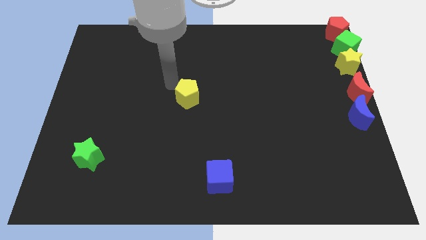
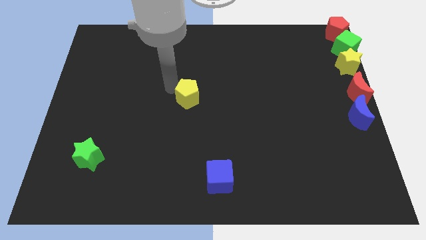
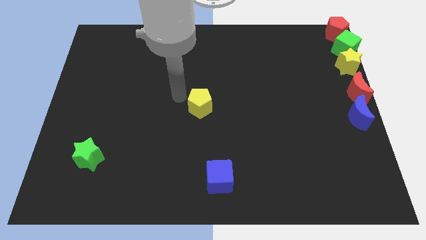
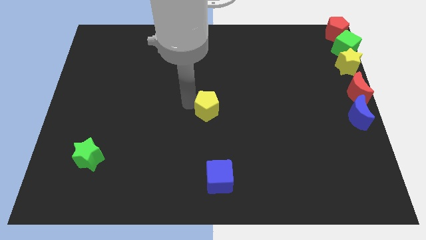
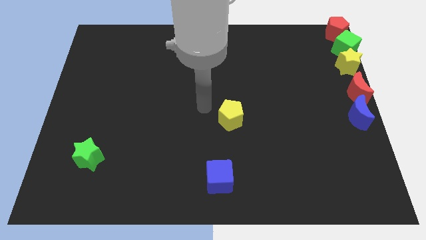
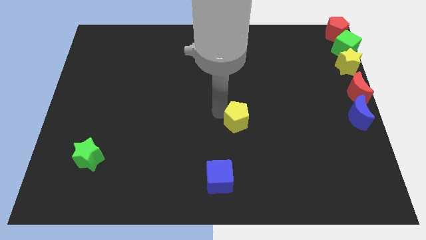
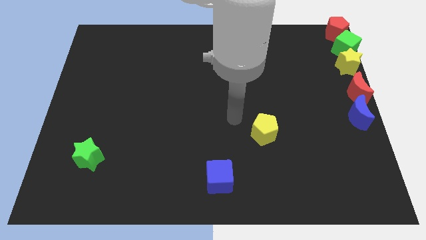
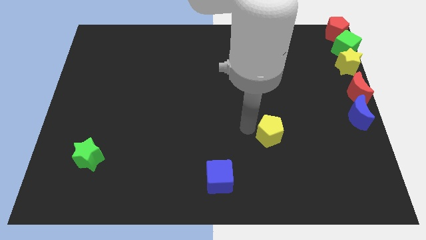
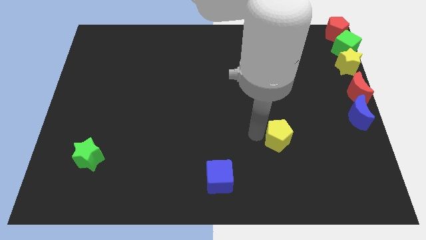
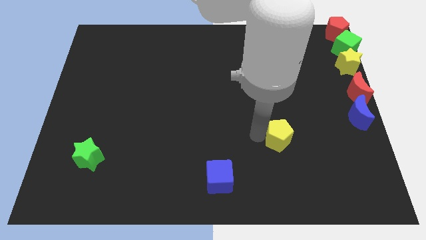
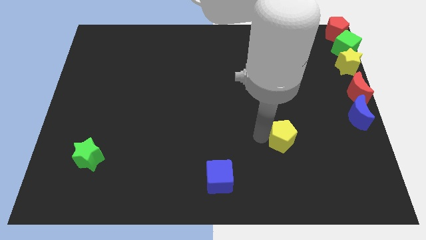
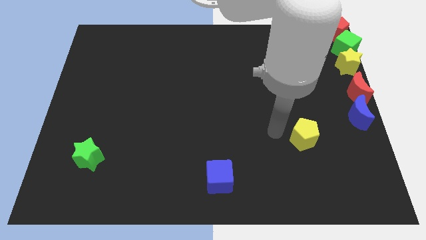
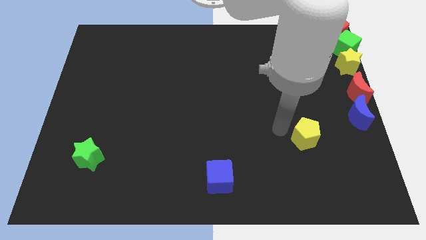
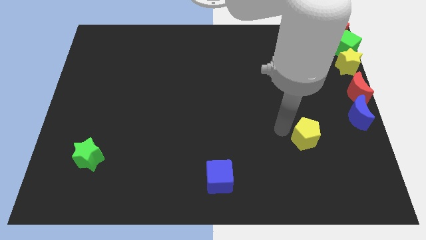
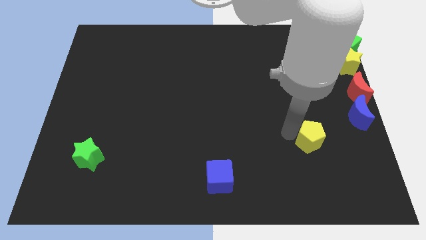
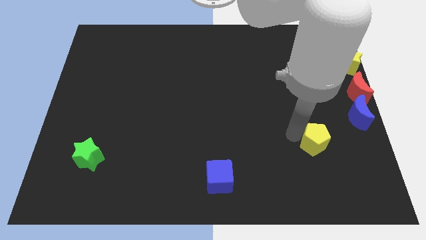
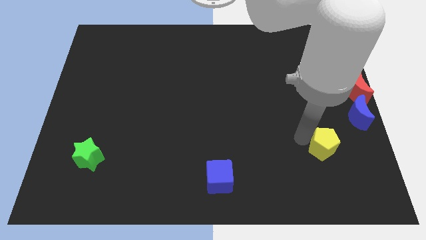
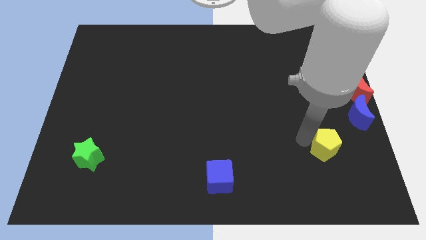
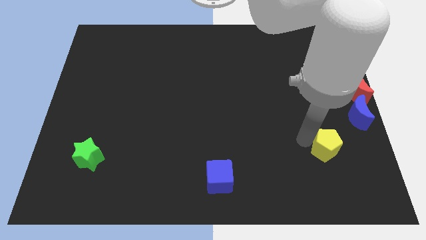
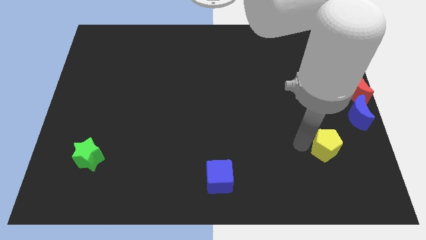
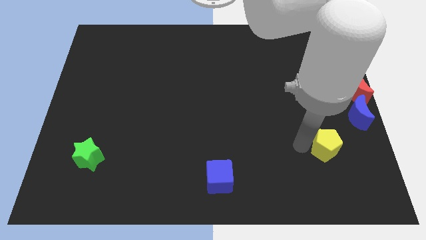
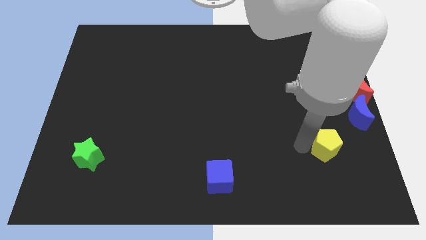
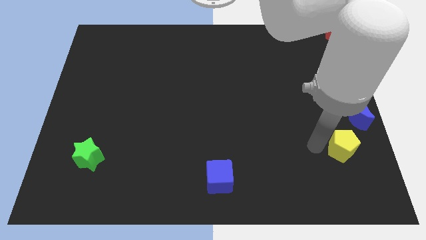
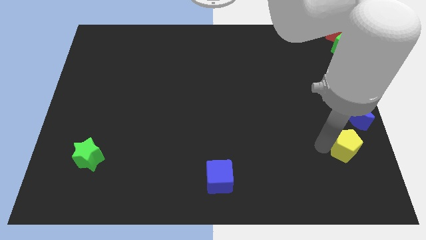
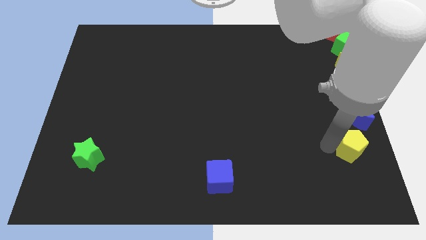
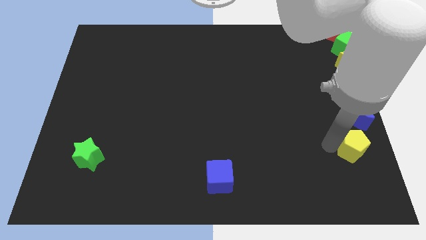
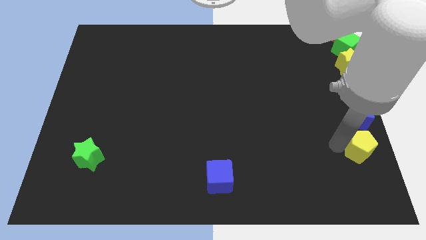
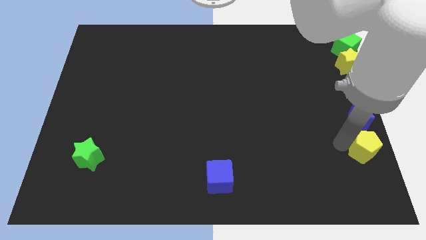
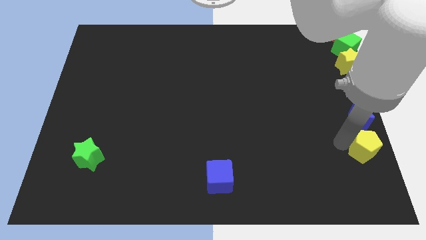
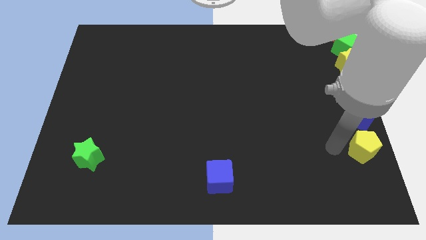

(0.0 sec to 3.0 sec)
place yellow pentagon below blue crescent

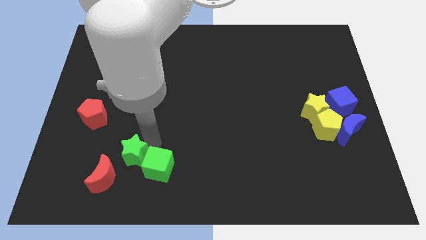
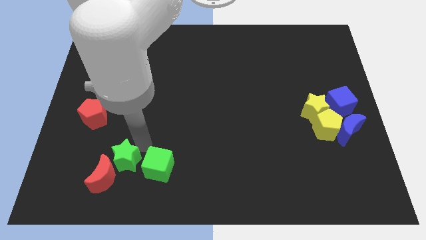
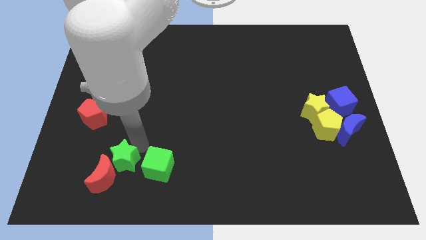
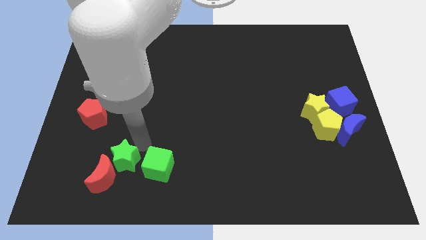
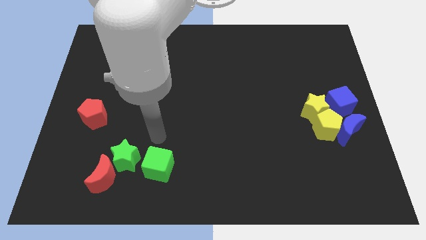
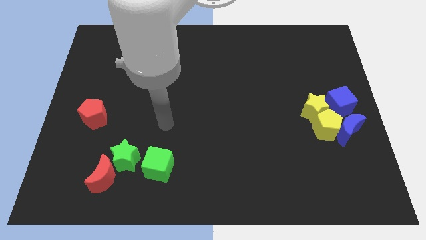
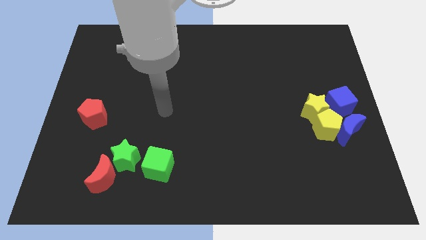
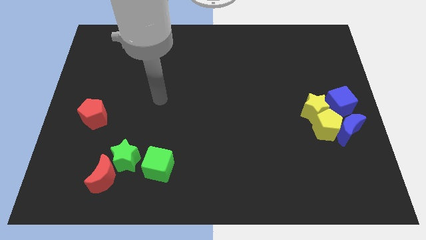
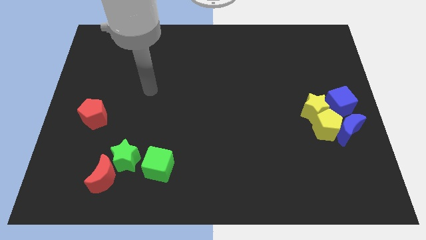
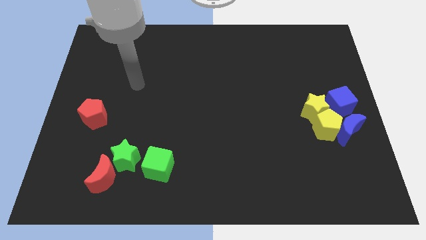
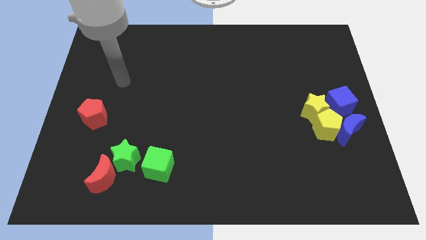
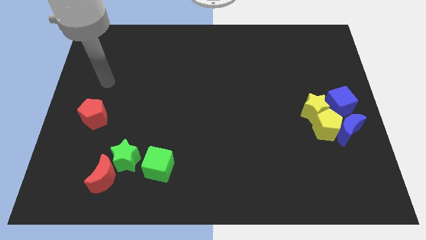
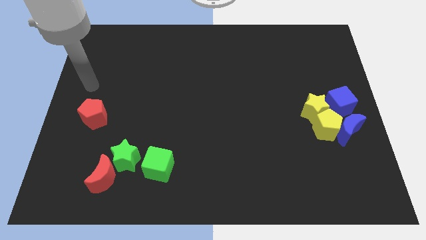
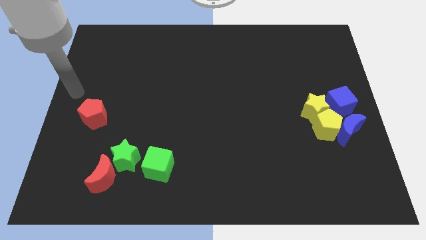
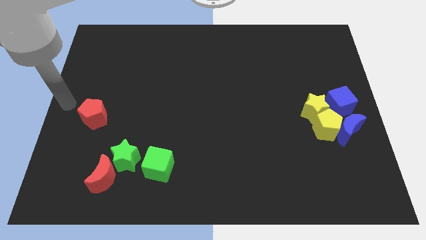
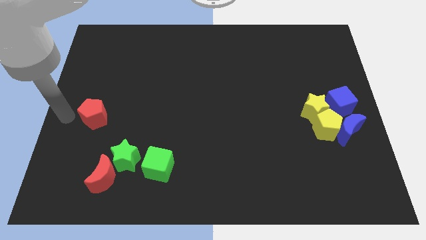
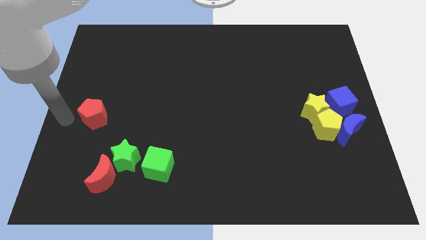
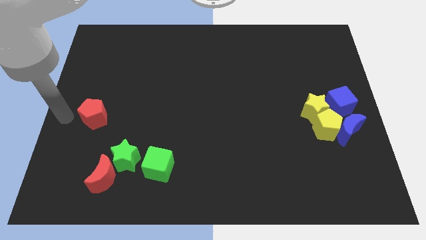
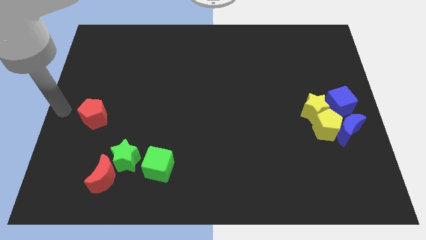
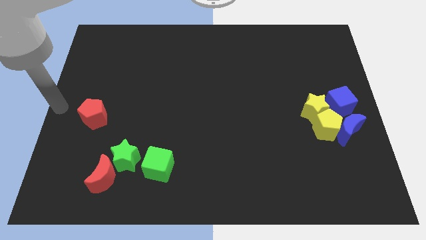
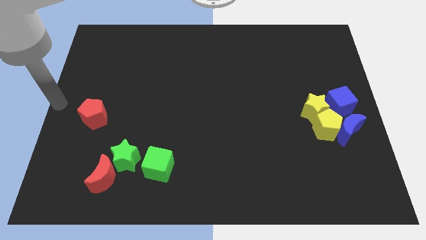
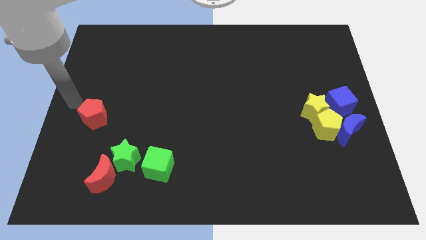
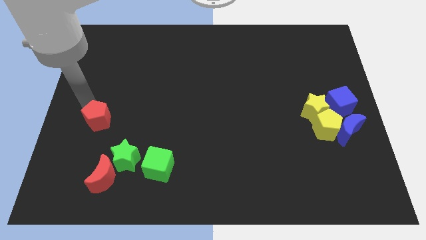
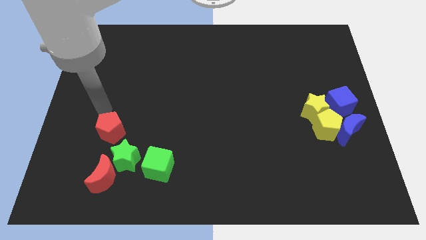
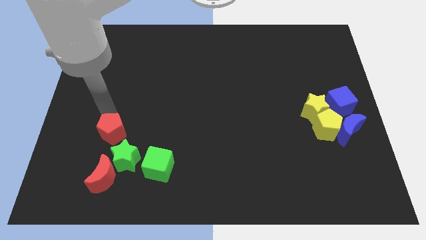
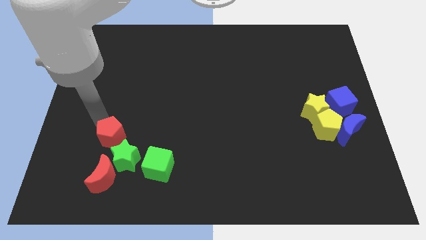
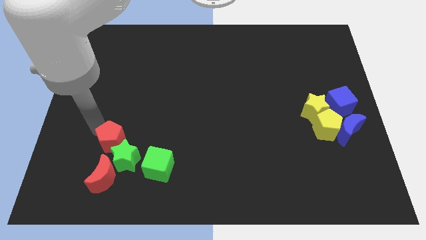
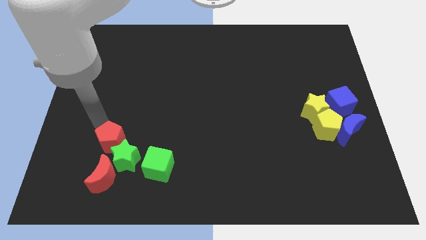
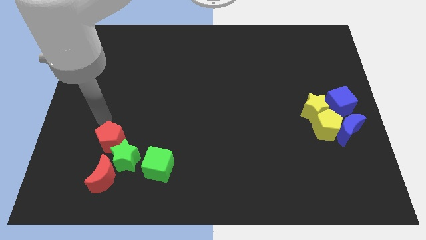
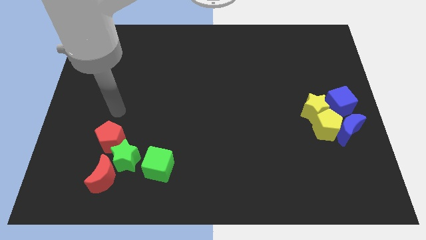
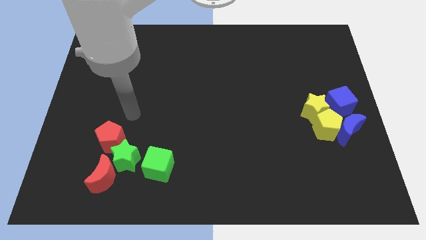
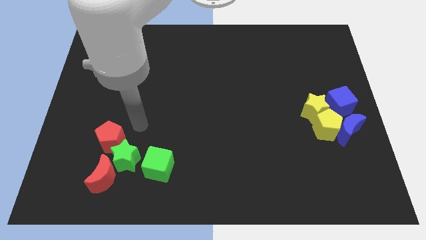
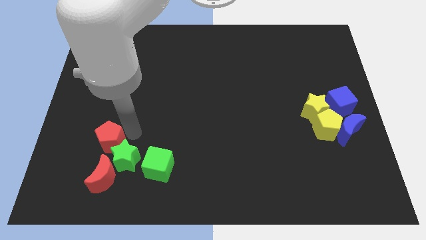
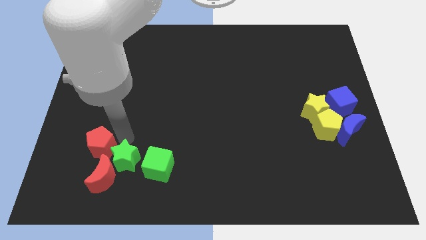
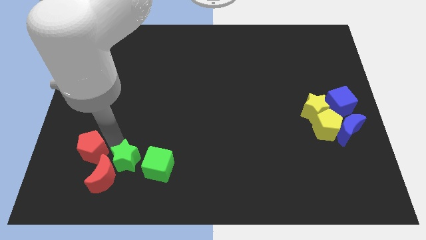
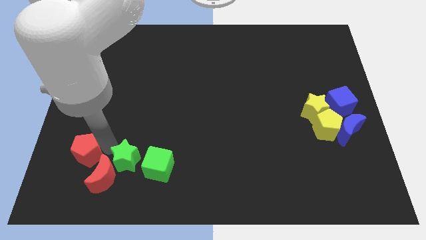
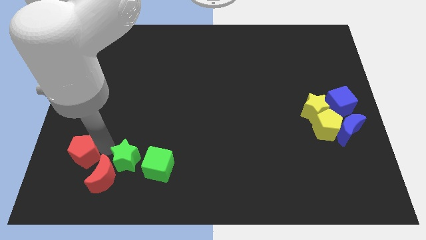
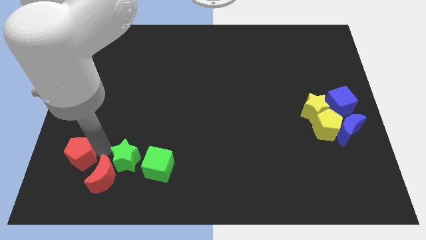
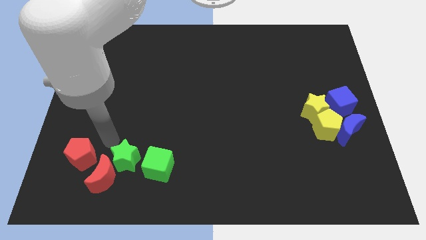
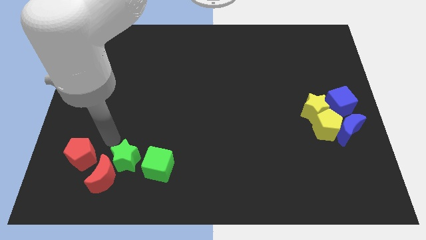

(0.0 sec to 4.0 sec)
place the red pentagon diagonally top left to red moon

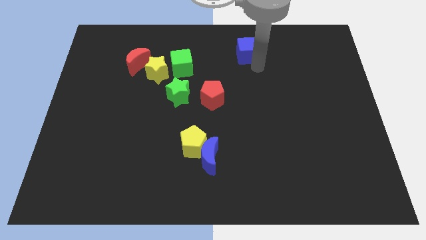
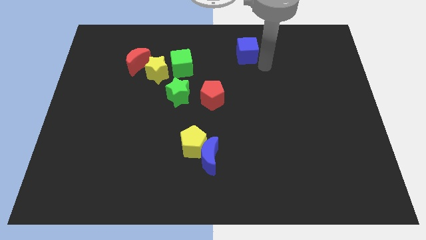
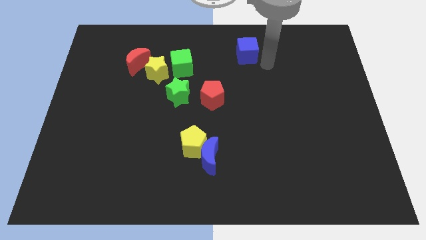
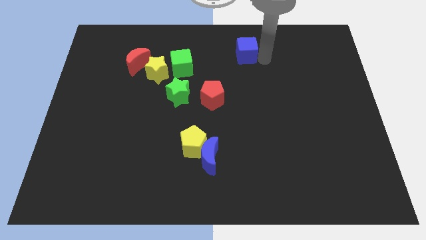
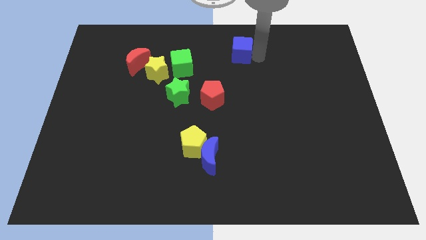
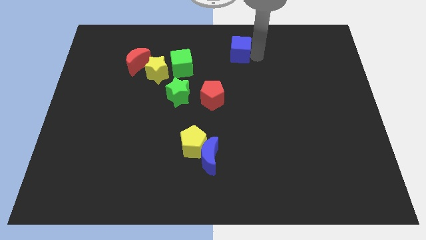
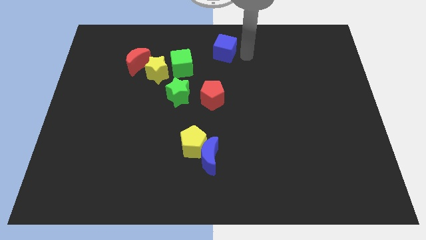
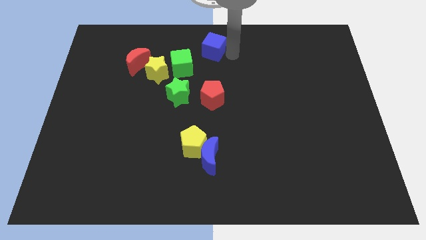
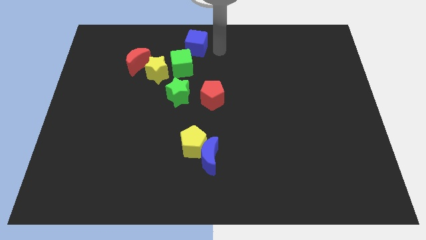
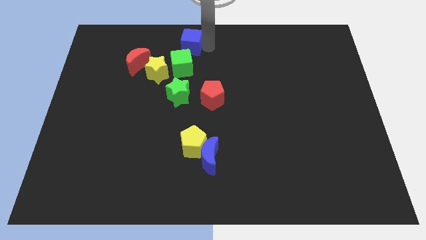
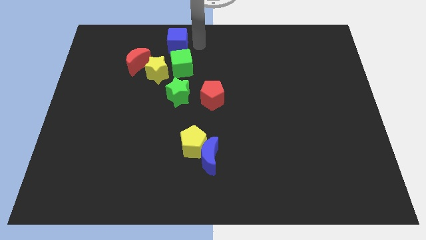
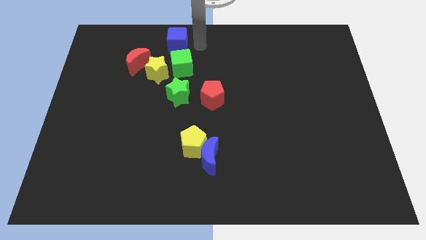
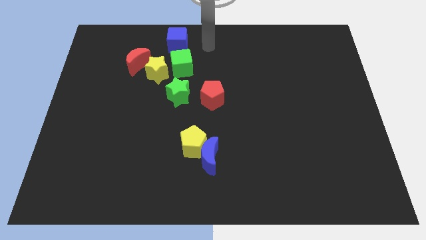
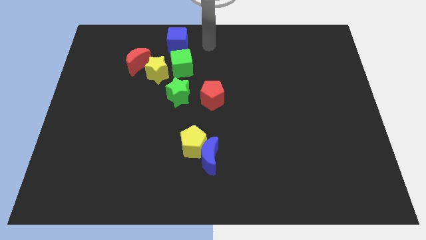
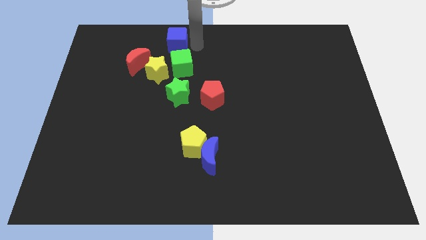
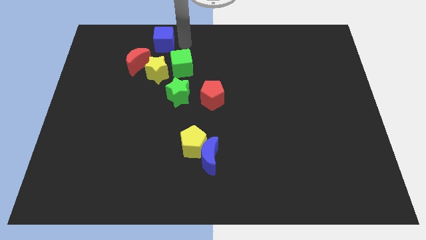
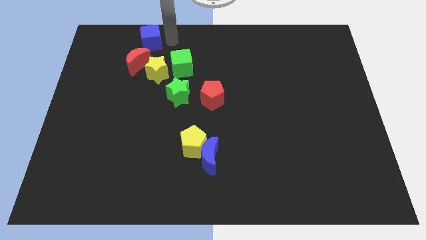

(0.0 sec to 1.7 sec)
push the blue cube slightly to the left

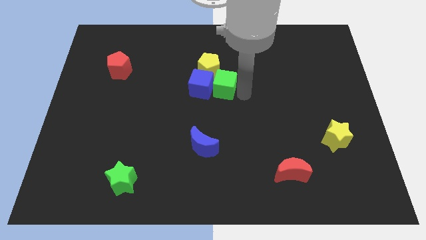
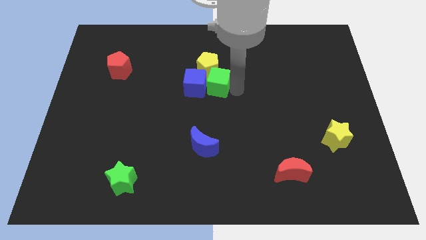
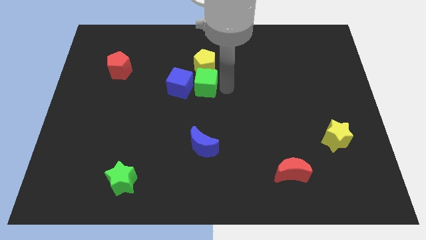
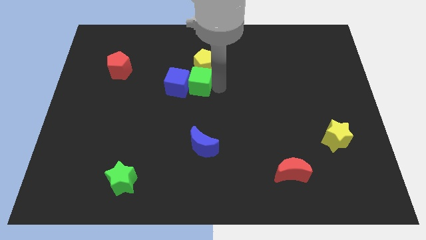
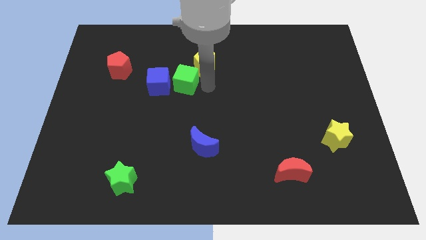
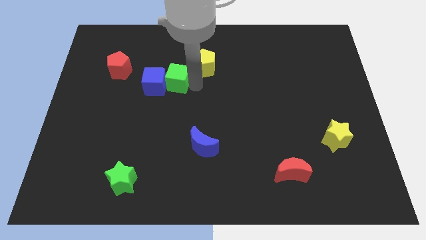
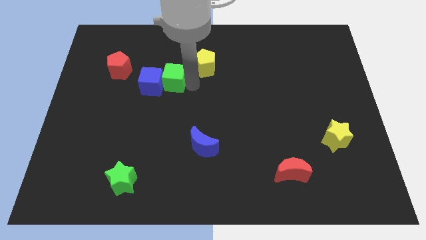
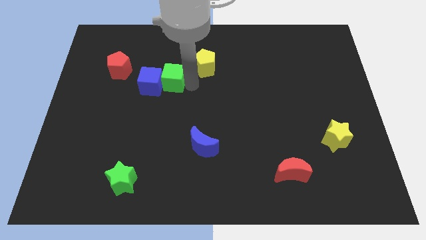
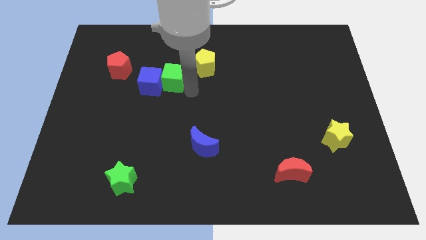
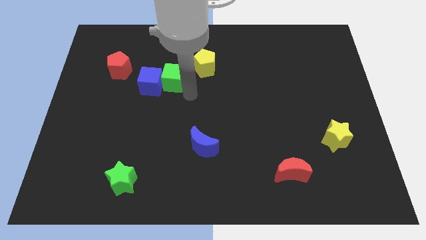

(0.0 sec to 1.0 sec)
push blue cube and green cube slightly towards left
